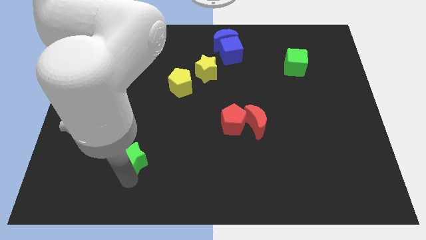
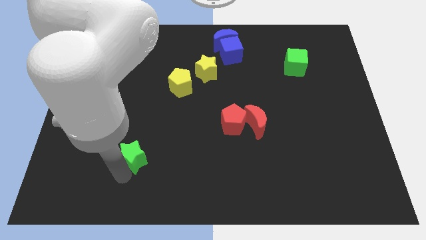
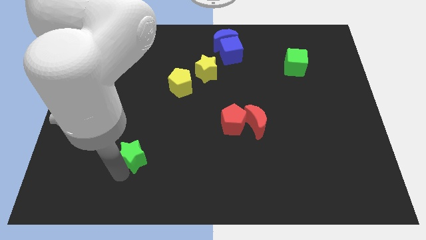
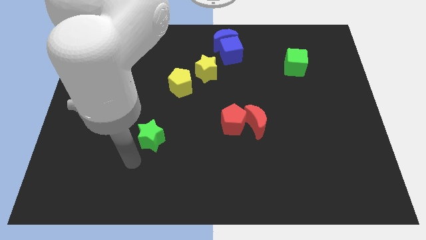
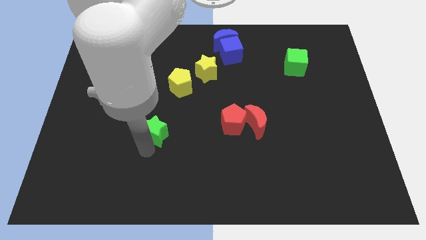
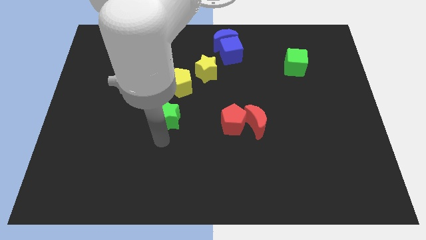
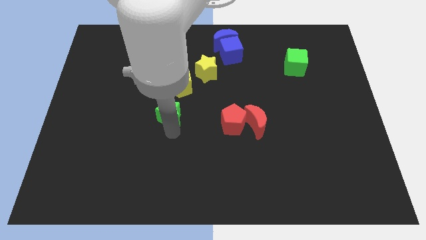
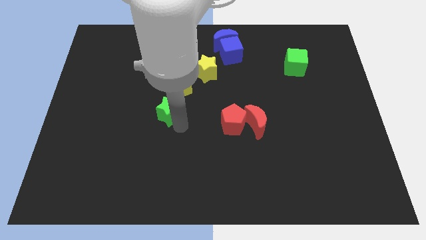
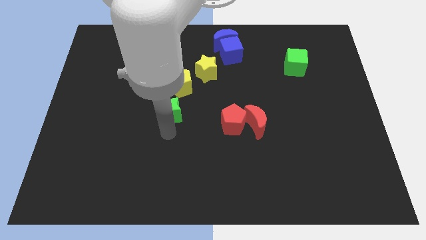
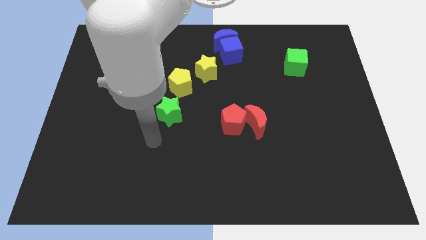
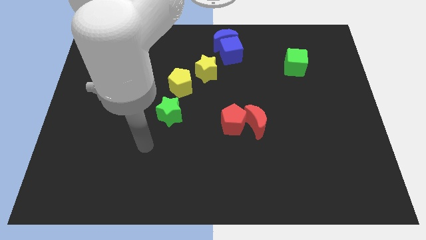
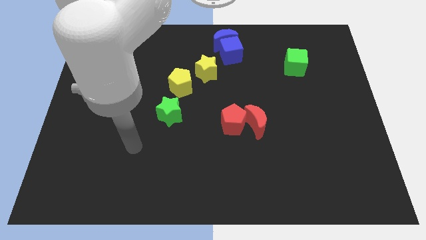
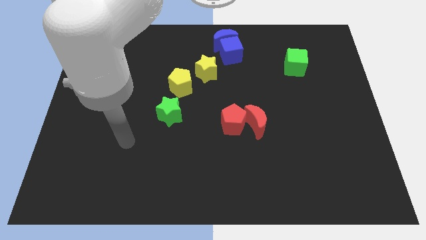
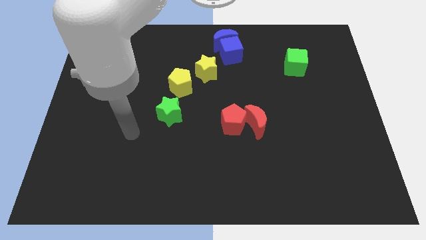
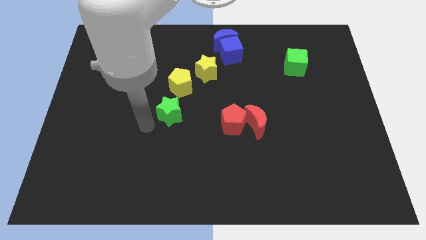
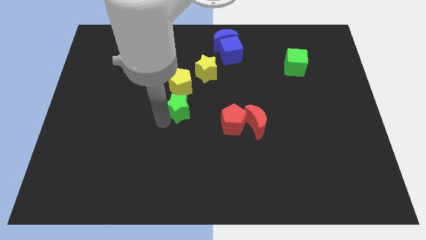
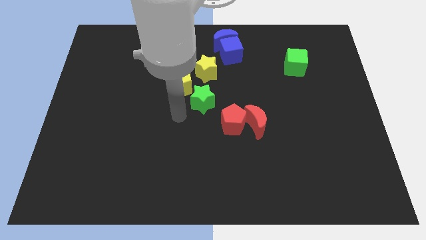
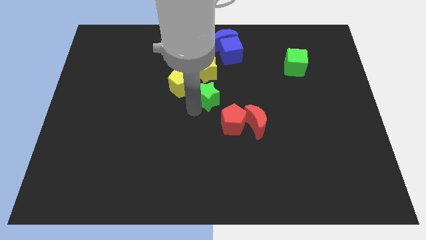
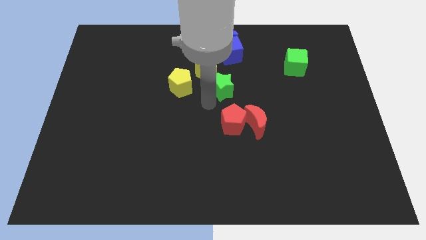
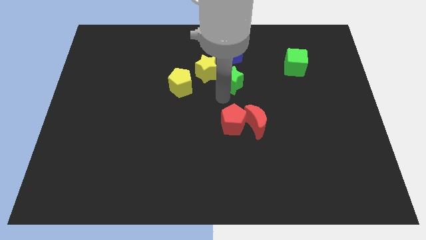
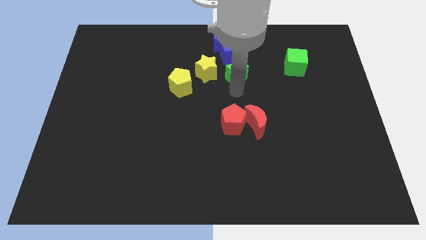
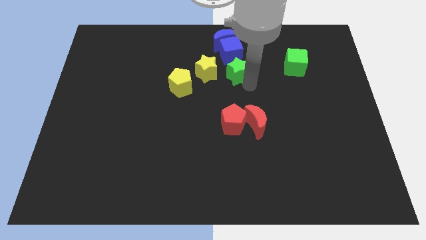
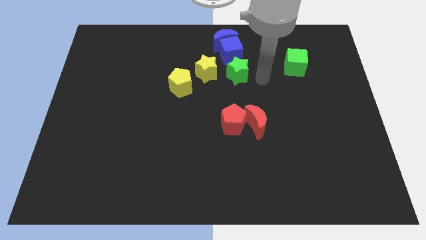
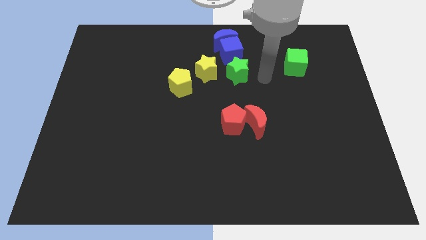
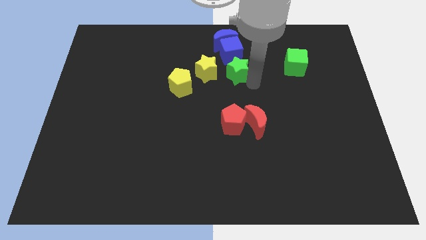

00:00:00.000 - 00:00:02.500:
place green star below blue cube

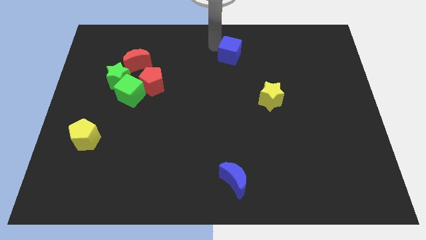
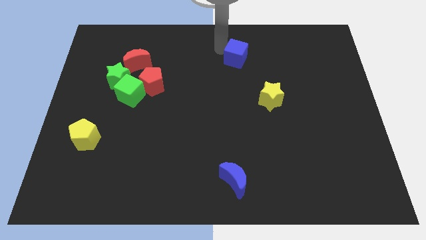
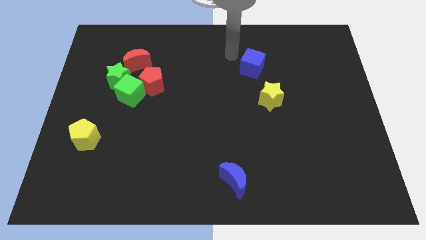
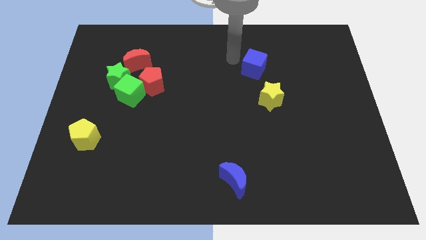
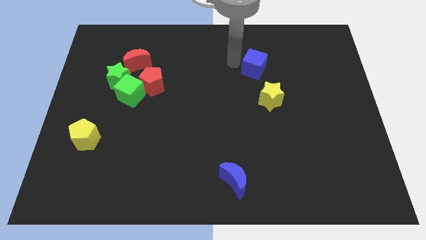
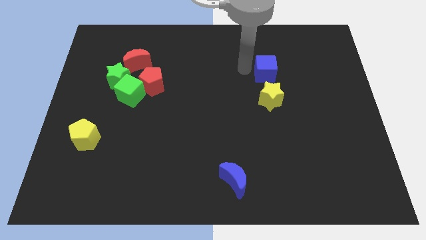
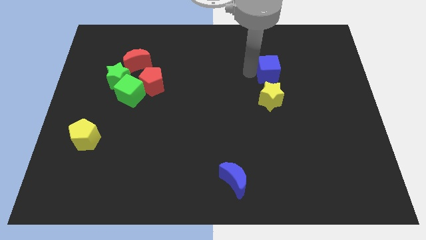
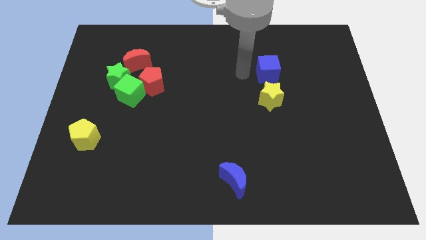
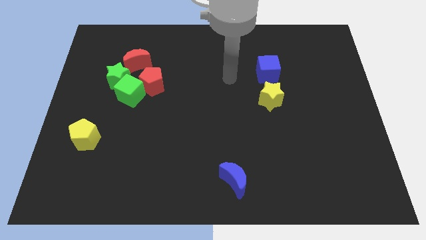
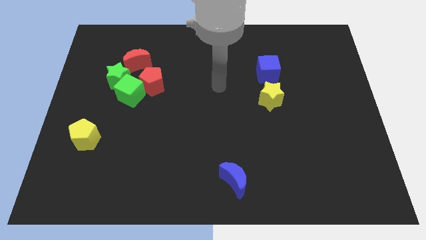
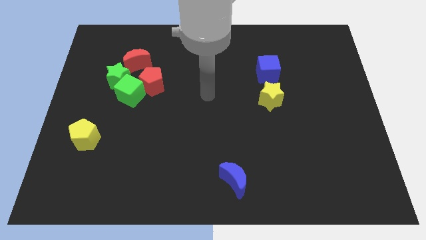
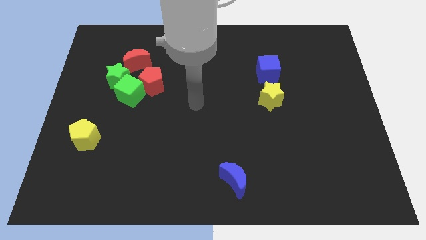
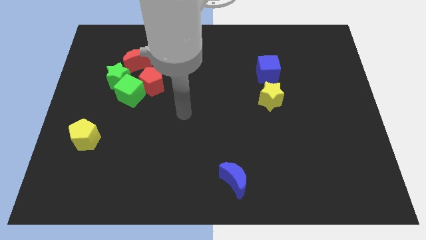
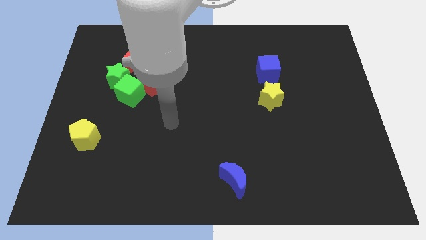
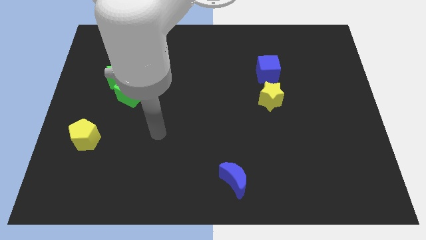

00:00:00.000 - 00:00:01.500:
move the blue cube above yellow star

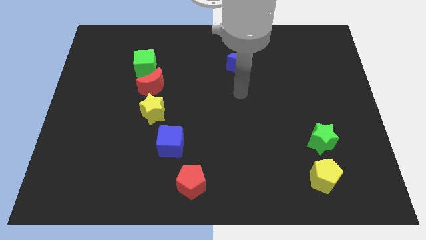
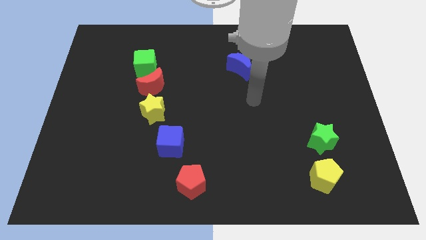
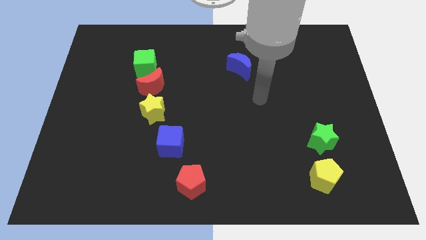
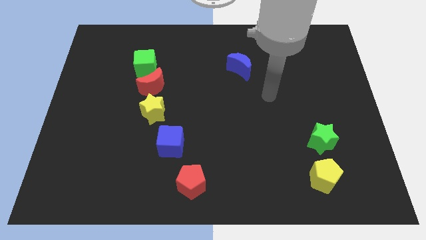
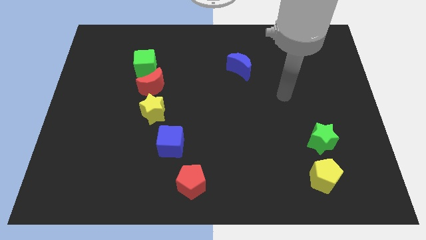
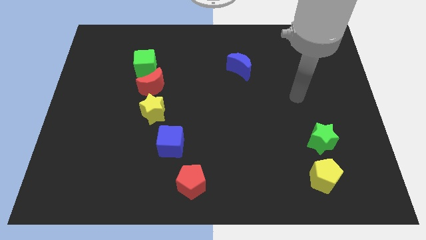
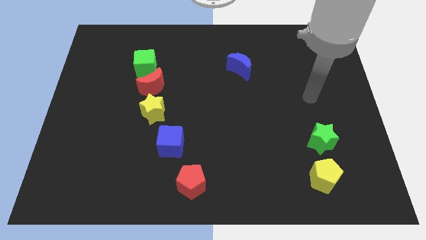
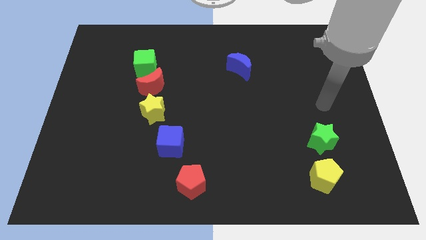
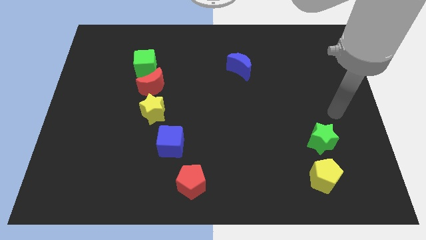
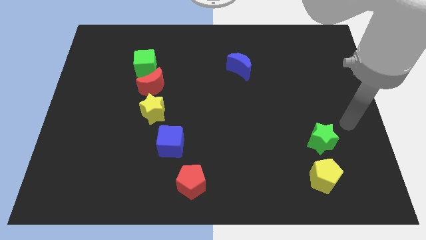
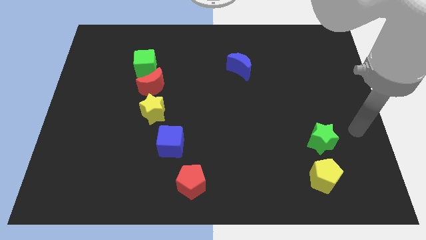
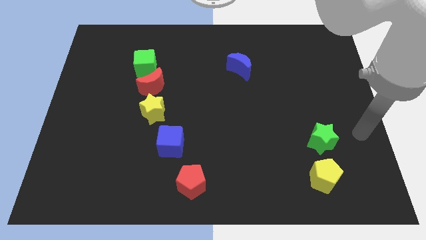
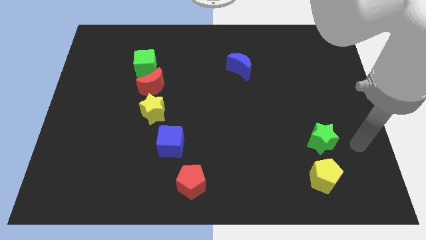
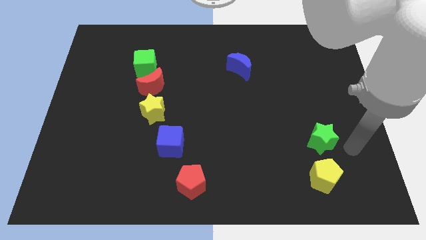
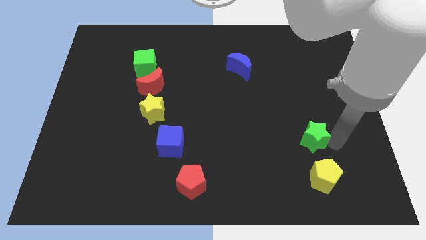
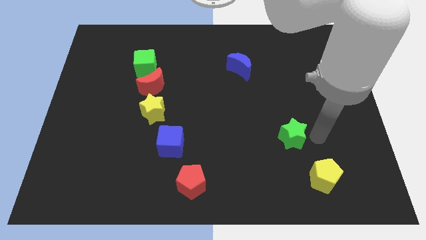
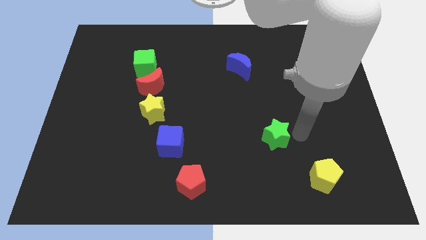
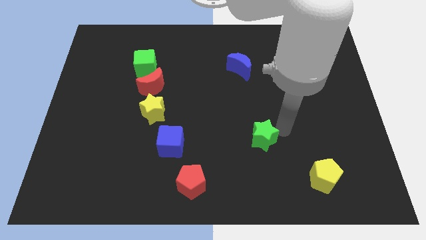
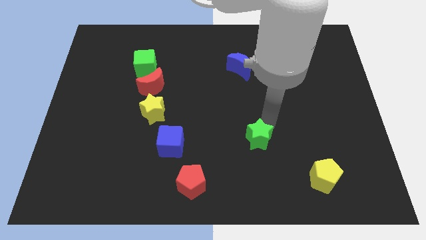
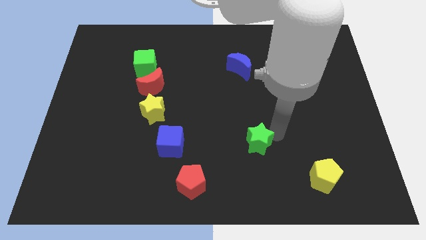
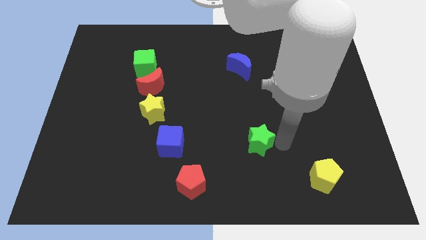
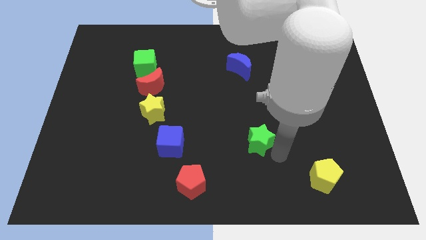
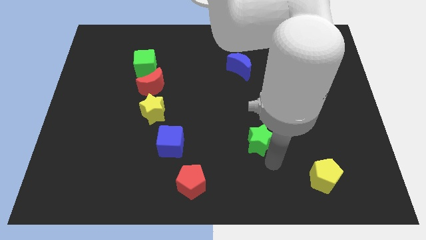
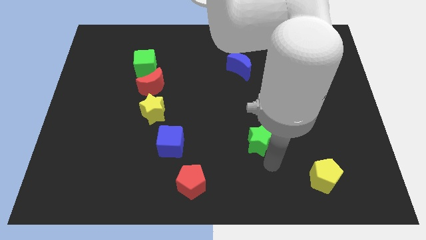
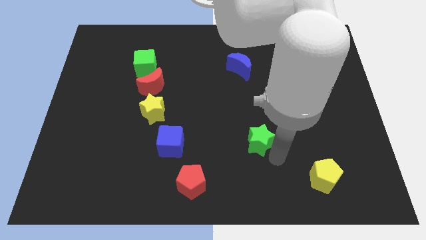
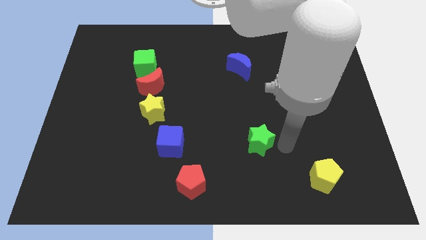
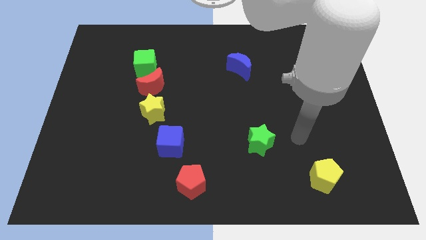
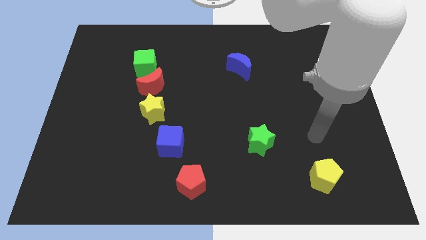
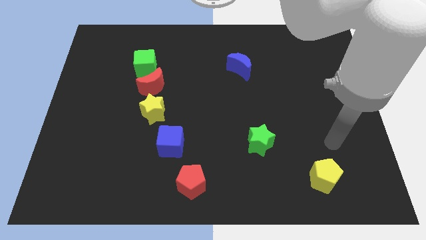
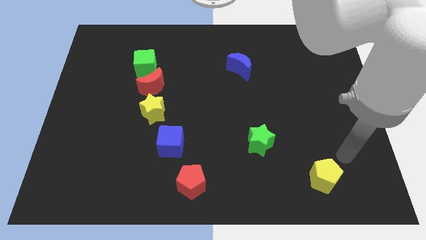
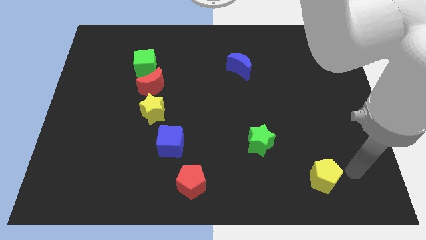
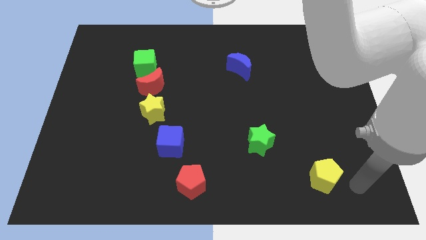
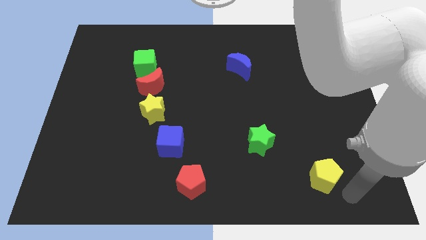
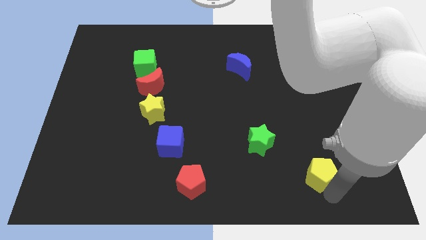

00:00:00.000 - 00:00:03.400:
place green star to the right of blue cube

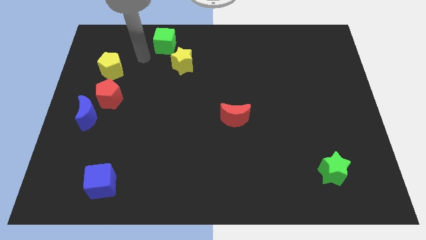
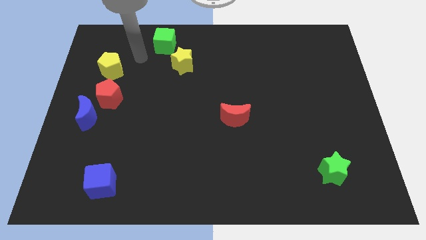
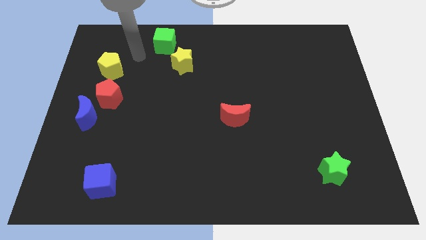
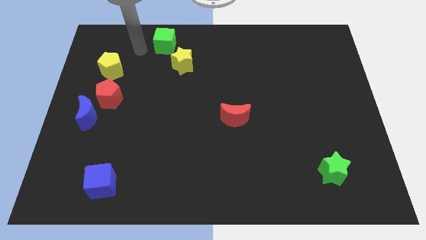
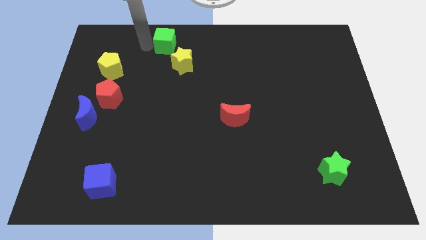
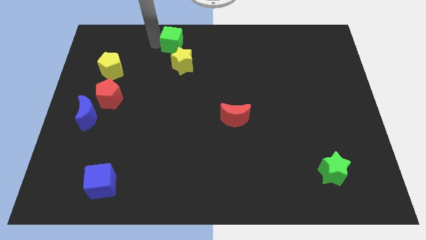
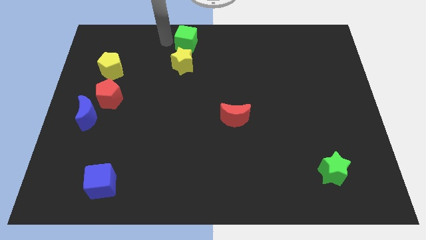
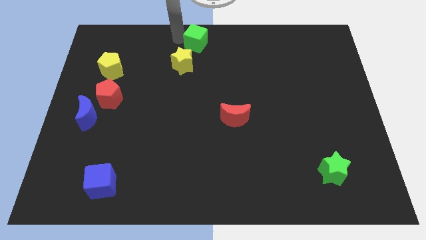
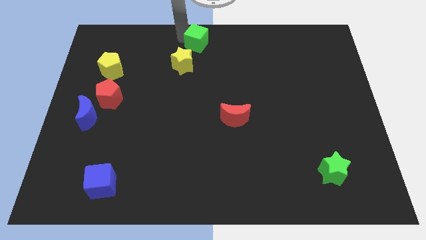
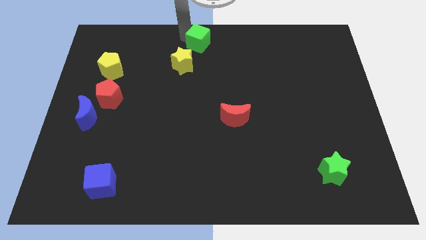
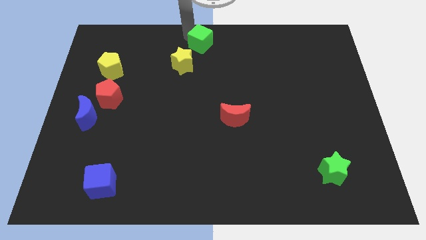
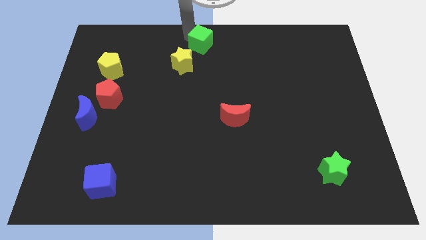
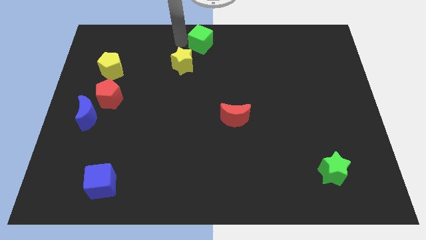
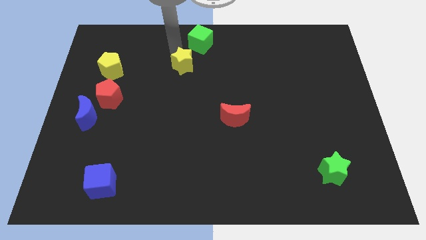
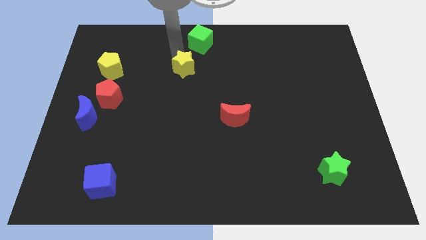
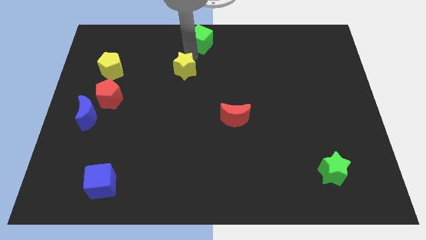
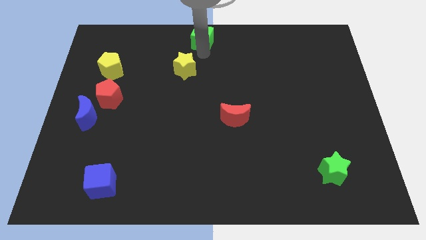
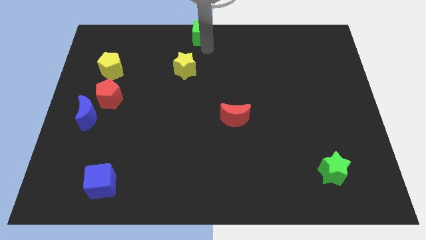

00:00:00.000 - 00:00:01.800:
push the green cube to the center middle of the board
